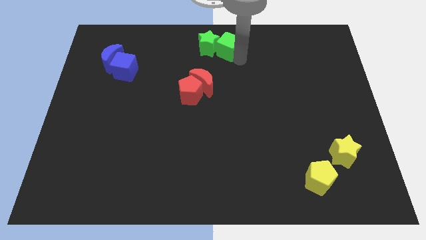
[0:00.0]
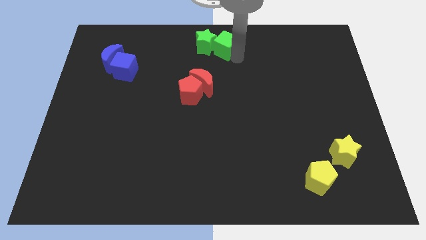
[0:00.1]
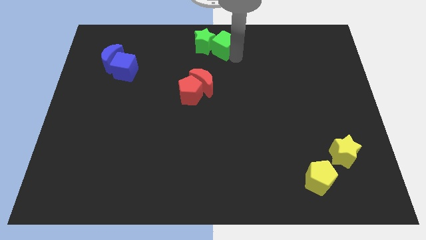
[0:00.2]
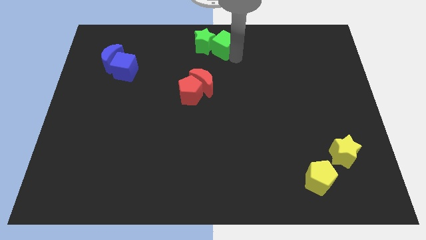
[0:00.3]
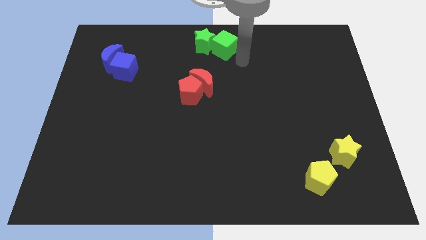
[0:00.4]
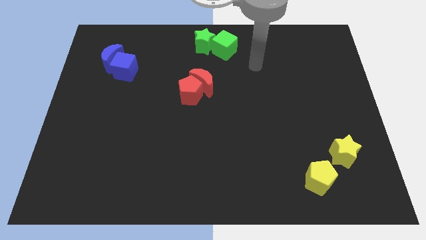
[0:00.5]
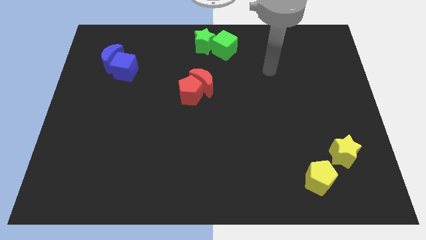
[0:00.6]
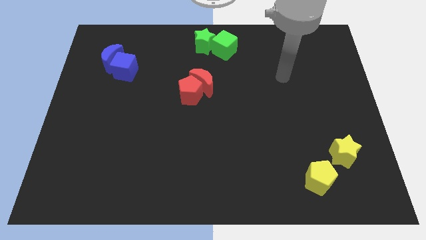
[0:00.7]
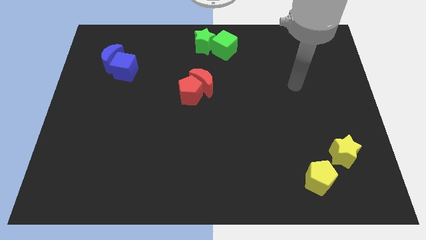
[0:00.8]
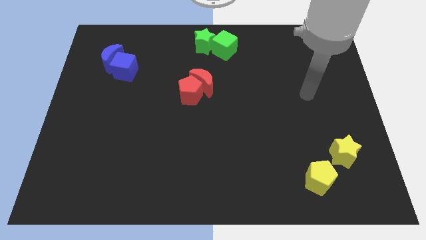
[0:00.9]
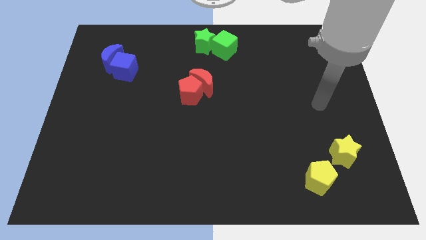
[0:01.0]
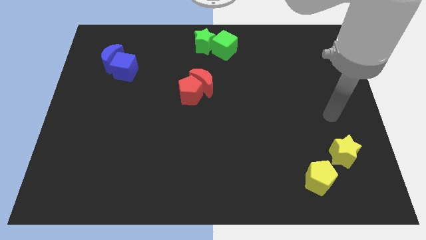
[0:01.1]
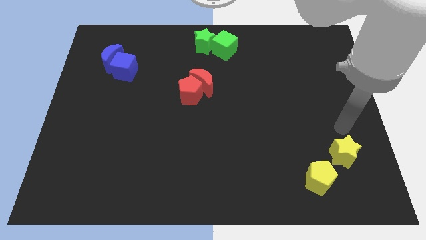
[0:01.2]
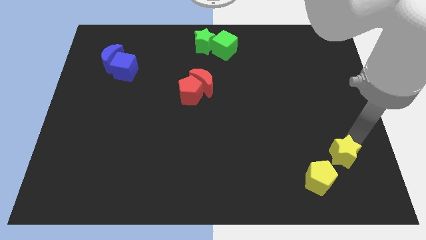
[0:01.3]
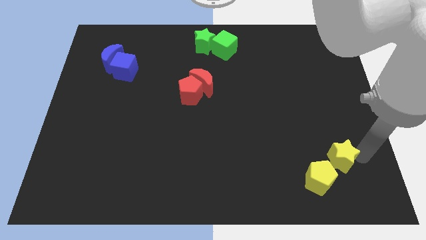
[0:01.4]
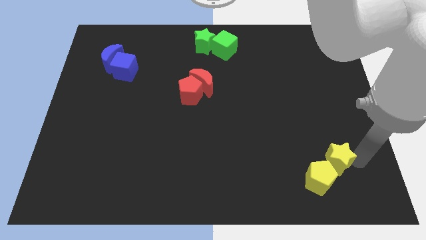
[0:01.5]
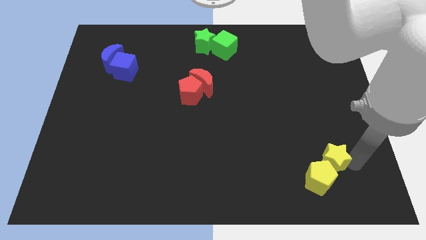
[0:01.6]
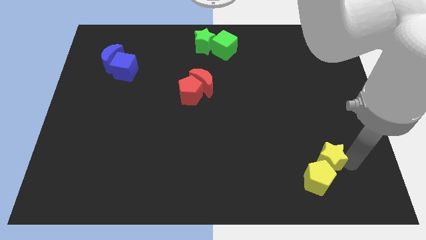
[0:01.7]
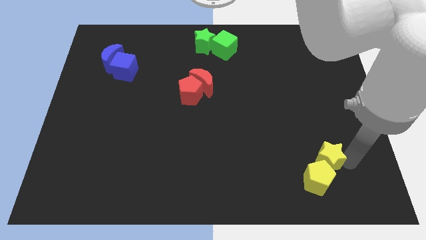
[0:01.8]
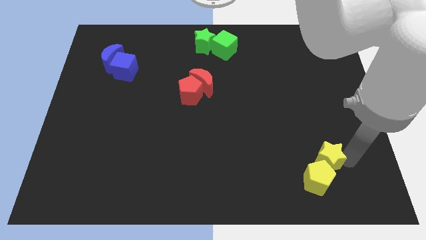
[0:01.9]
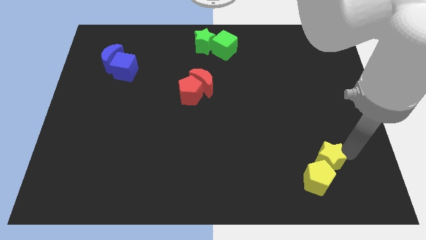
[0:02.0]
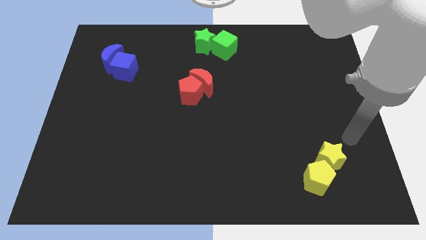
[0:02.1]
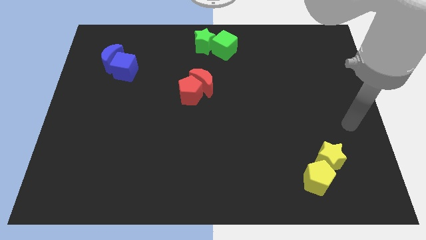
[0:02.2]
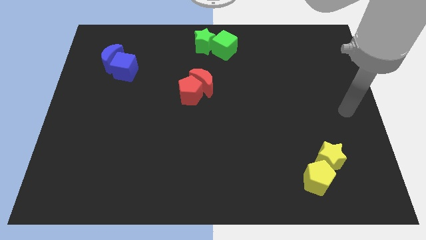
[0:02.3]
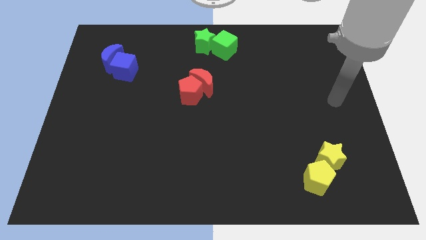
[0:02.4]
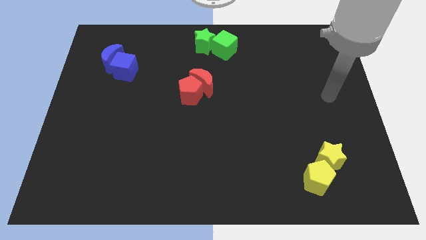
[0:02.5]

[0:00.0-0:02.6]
group up the yellow blocks at the bottom right side of the table

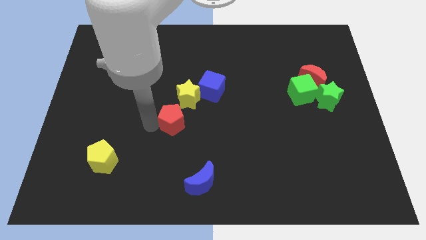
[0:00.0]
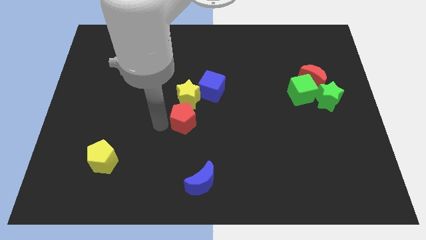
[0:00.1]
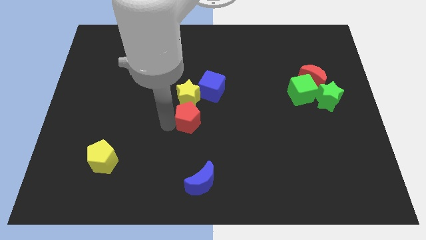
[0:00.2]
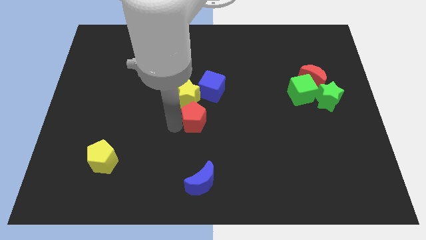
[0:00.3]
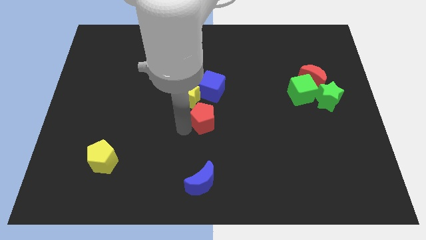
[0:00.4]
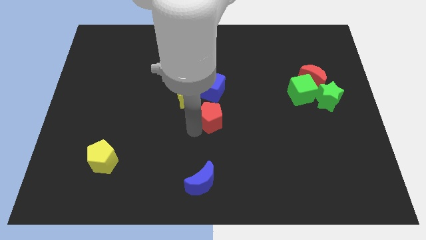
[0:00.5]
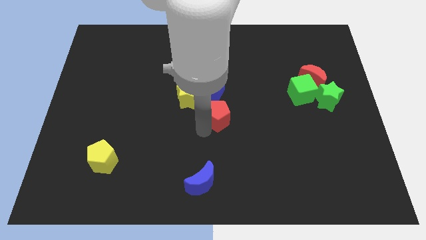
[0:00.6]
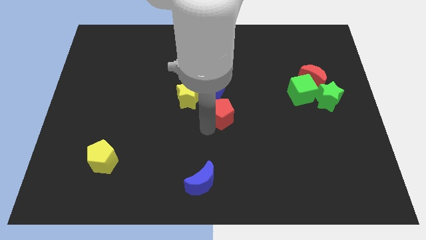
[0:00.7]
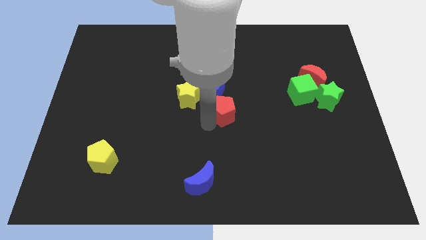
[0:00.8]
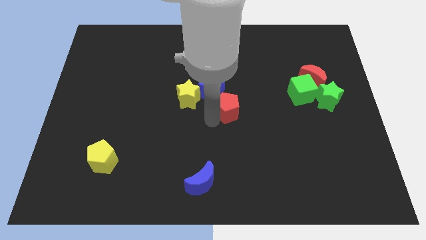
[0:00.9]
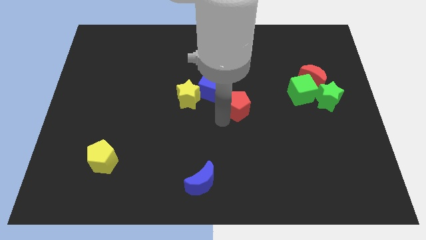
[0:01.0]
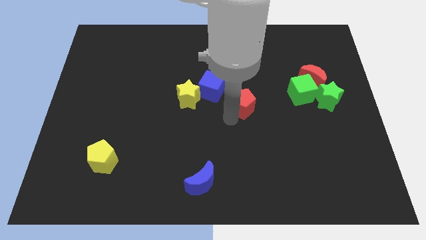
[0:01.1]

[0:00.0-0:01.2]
put the red pentagon at the bottom right side of blue cube

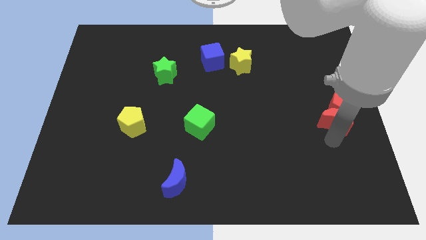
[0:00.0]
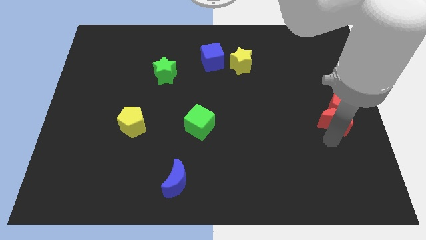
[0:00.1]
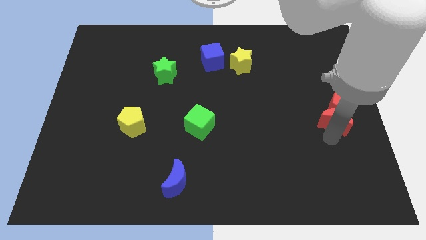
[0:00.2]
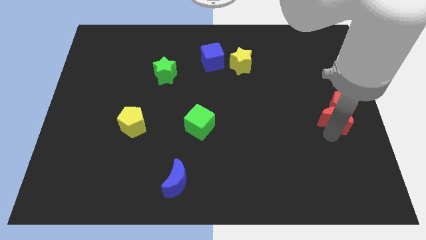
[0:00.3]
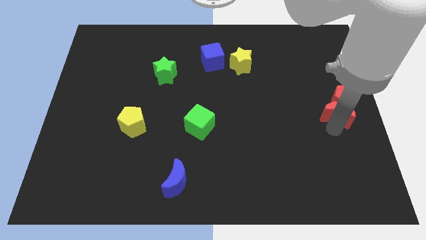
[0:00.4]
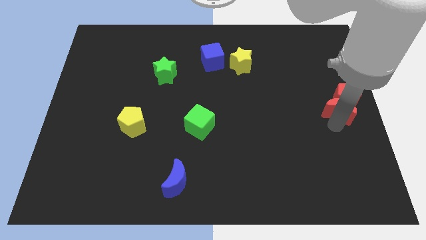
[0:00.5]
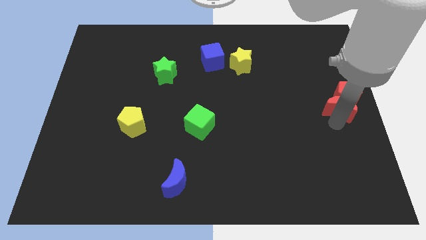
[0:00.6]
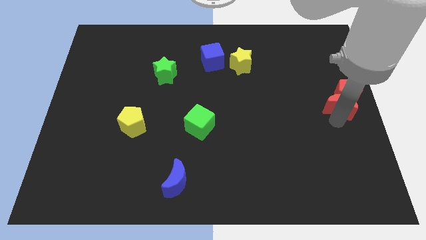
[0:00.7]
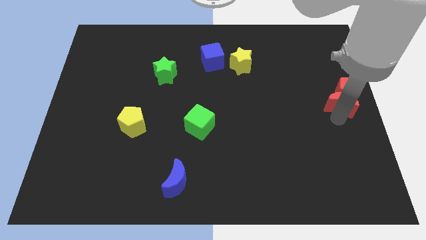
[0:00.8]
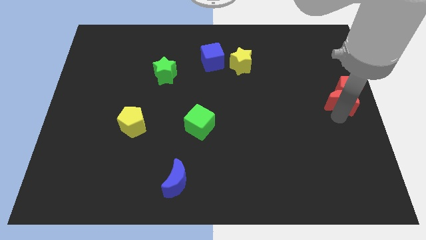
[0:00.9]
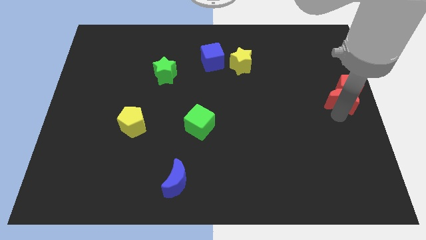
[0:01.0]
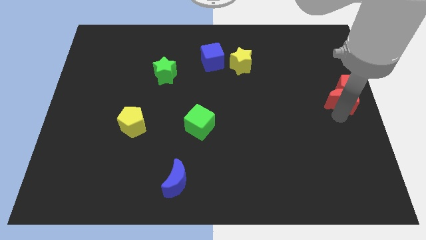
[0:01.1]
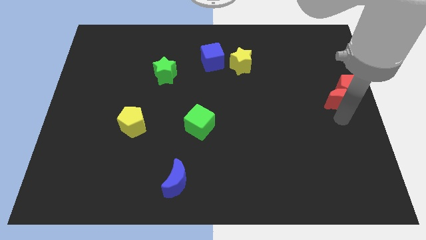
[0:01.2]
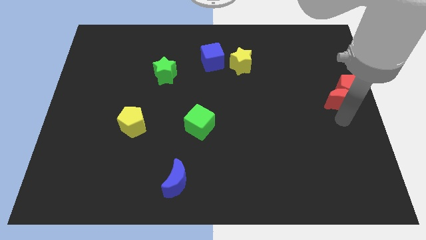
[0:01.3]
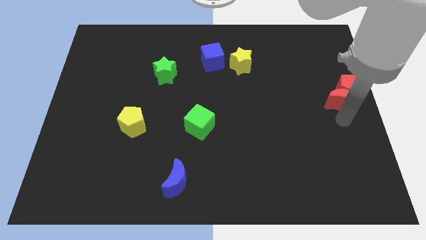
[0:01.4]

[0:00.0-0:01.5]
move the red blocks to the right center of the board

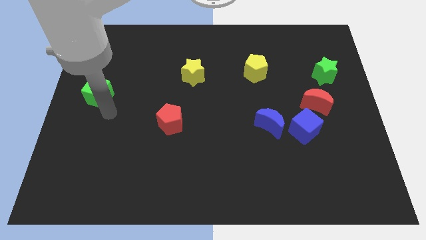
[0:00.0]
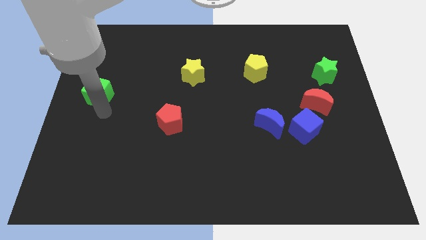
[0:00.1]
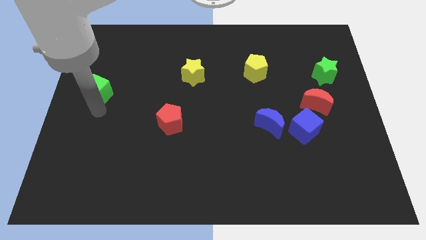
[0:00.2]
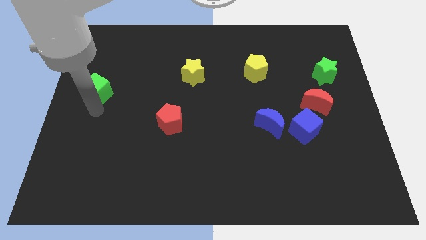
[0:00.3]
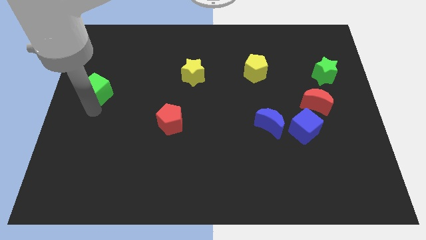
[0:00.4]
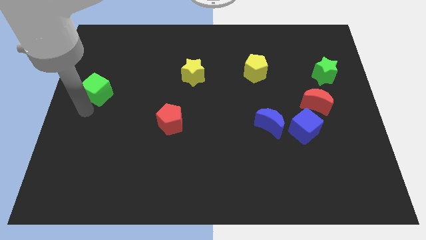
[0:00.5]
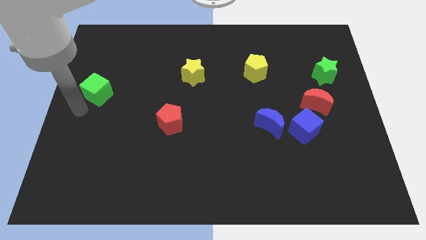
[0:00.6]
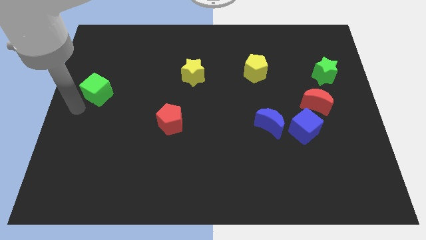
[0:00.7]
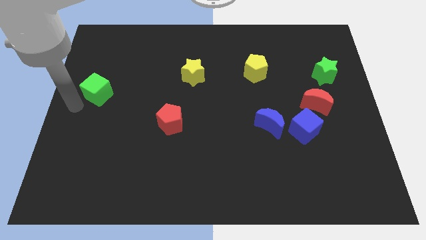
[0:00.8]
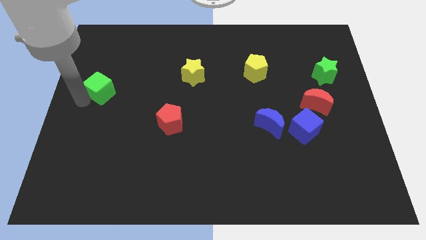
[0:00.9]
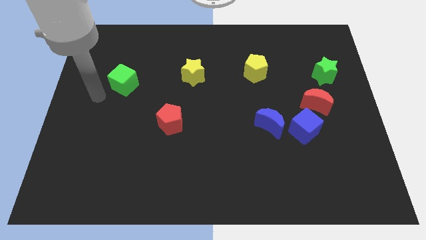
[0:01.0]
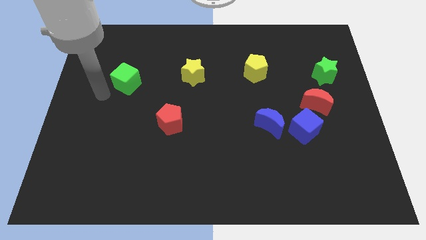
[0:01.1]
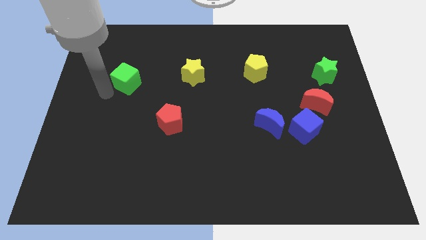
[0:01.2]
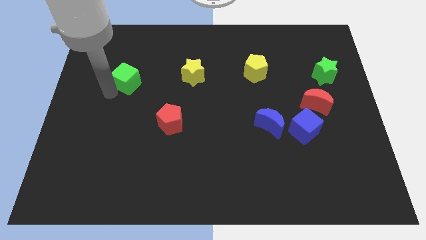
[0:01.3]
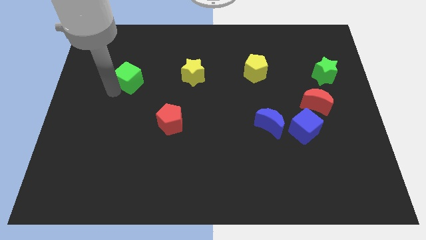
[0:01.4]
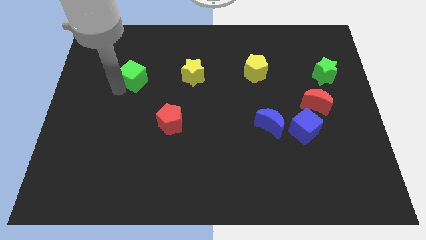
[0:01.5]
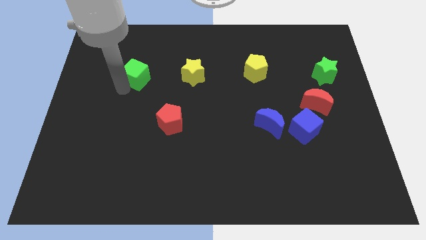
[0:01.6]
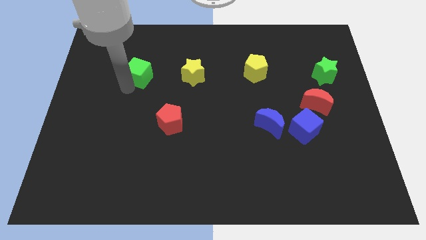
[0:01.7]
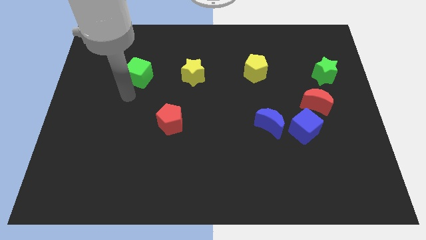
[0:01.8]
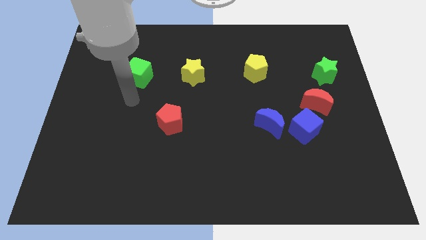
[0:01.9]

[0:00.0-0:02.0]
move the green cube to the left of yellow star

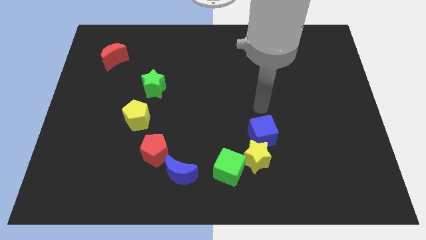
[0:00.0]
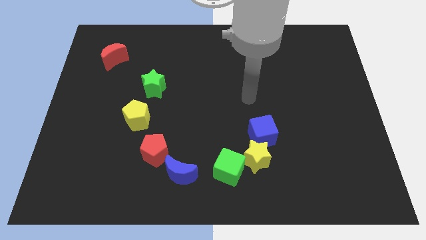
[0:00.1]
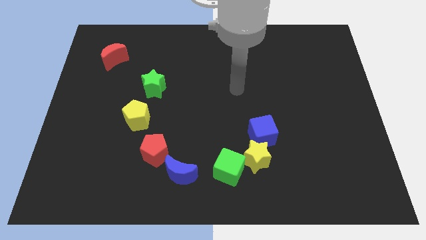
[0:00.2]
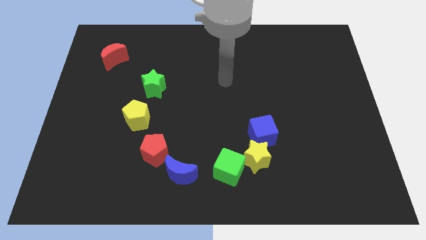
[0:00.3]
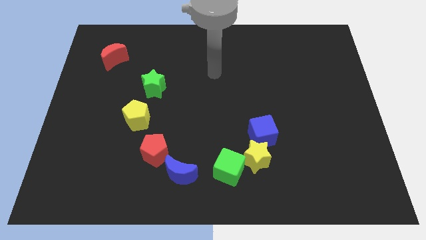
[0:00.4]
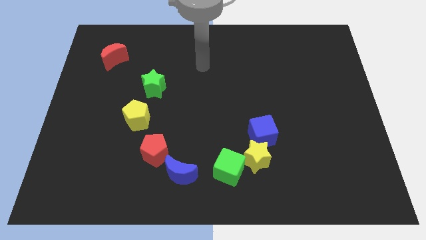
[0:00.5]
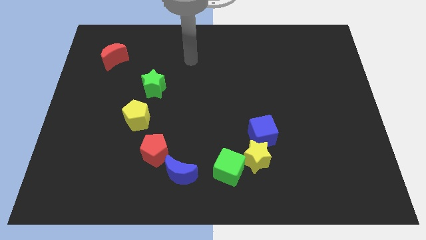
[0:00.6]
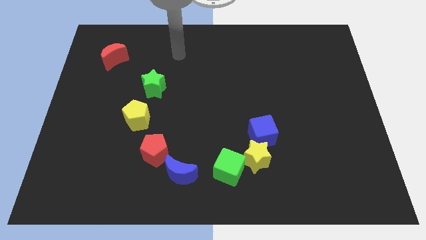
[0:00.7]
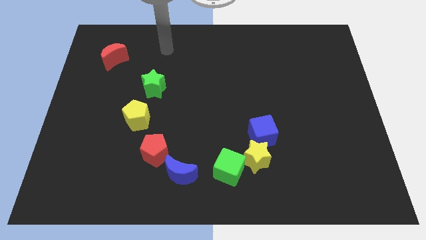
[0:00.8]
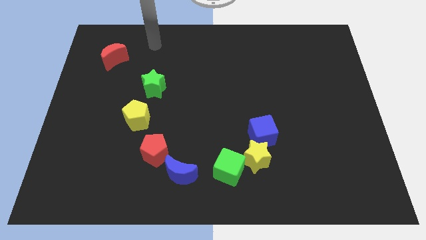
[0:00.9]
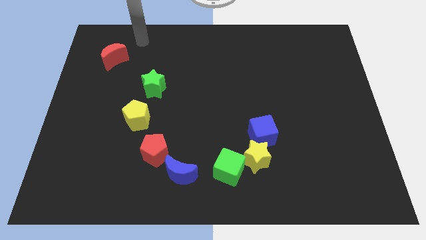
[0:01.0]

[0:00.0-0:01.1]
move your arm away from blue cube

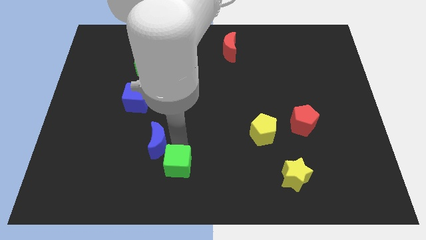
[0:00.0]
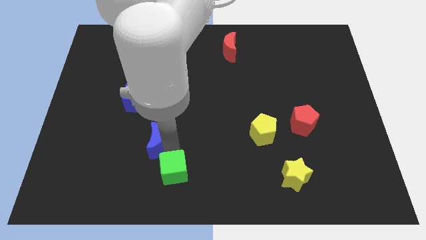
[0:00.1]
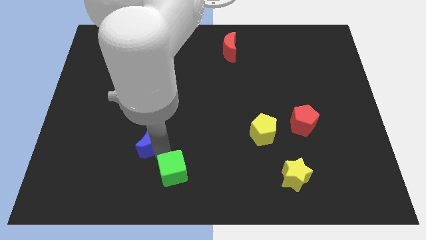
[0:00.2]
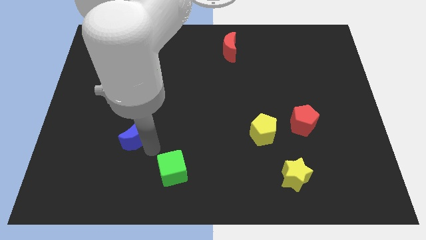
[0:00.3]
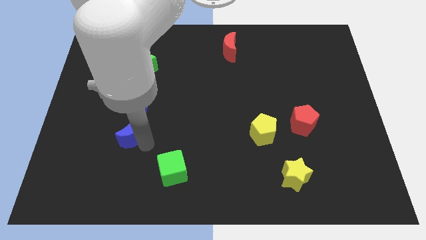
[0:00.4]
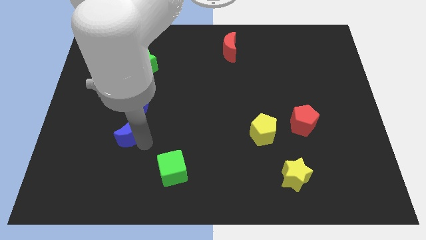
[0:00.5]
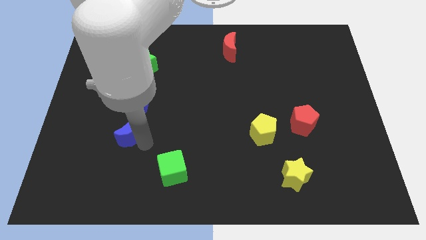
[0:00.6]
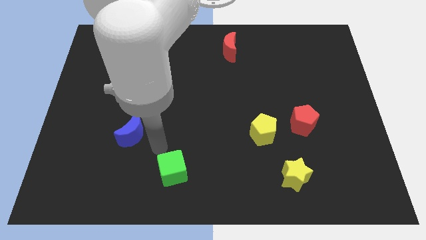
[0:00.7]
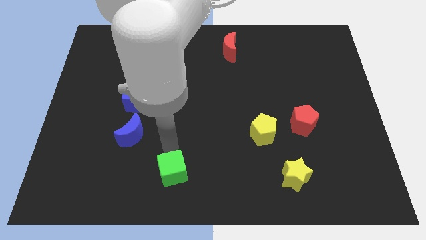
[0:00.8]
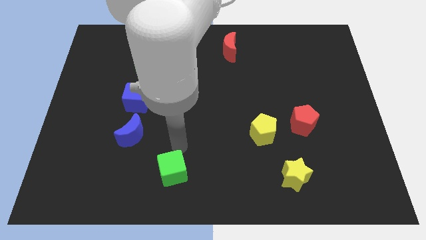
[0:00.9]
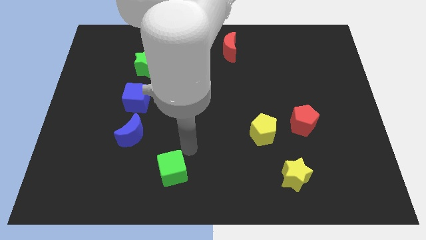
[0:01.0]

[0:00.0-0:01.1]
place the blue moon down to the blue cube
